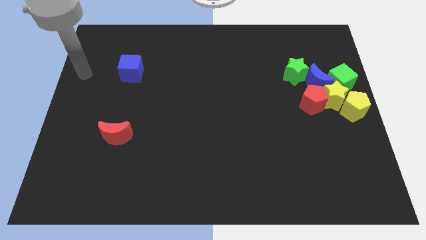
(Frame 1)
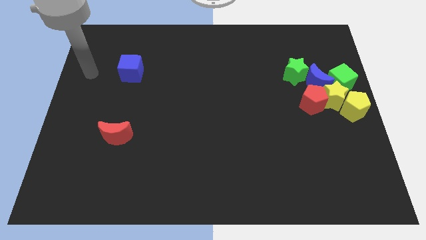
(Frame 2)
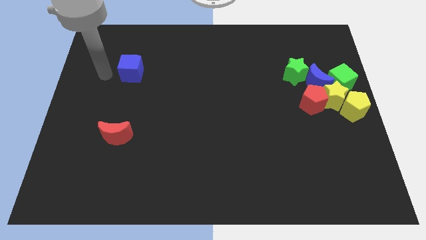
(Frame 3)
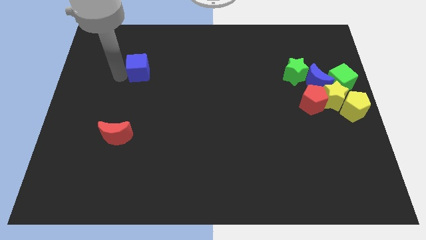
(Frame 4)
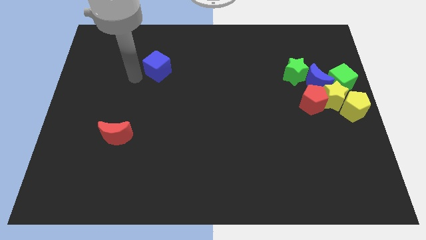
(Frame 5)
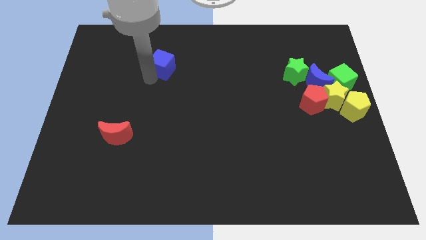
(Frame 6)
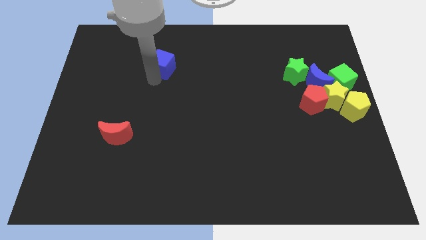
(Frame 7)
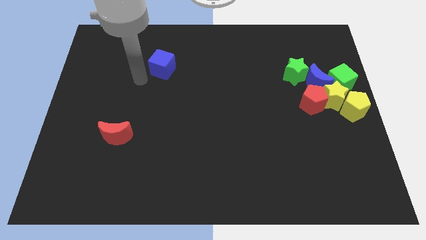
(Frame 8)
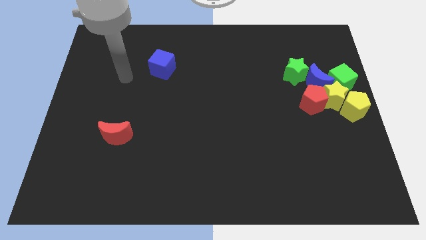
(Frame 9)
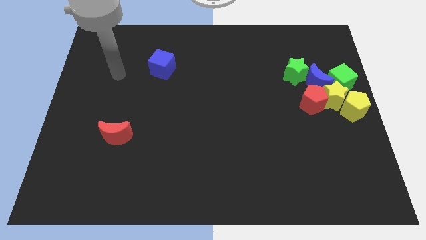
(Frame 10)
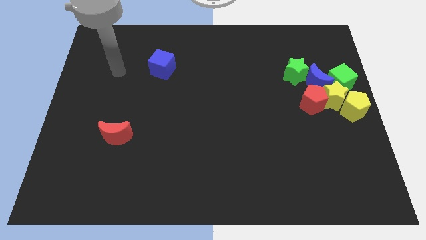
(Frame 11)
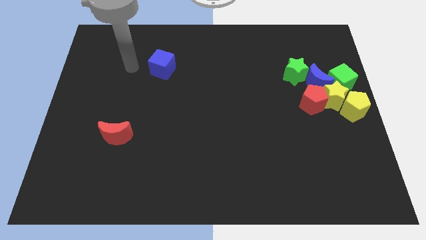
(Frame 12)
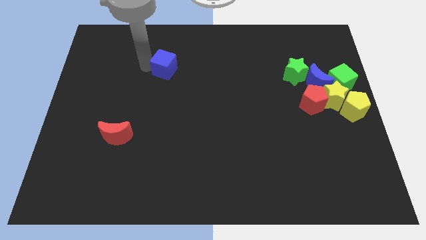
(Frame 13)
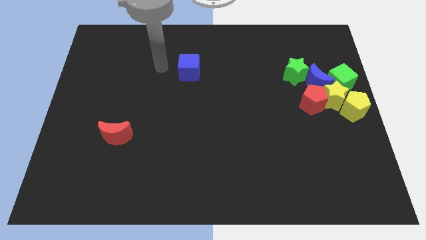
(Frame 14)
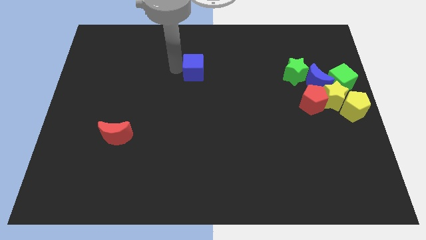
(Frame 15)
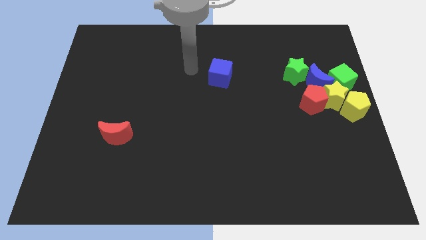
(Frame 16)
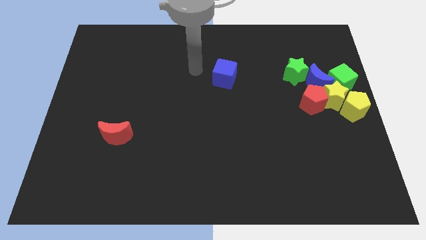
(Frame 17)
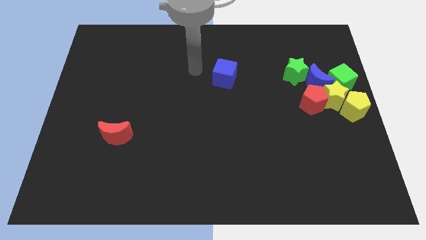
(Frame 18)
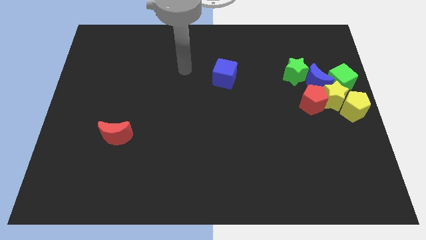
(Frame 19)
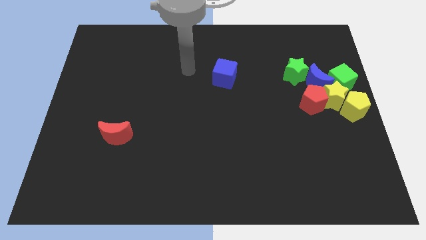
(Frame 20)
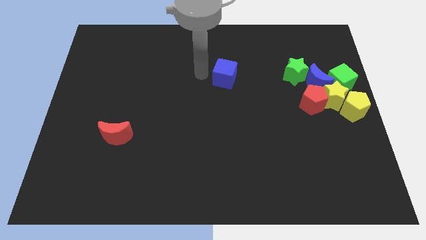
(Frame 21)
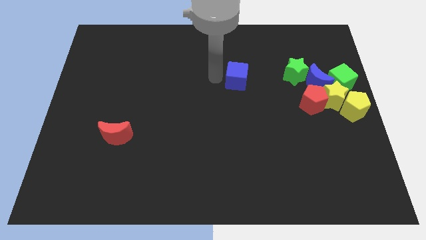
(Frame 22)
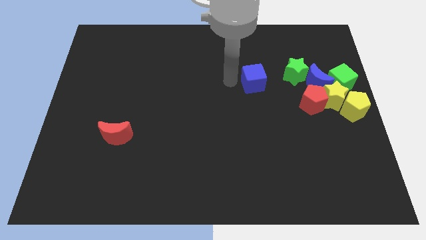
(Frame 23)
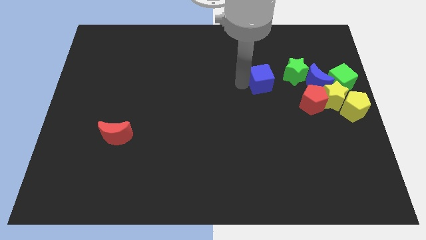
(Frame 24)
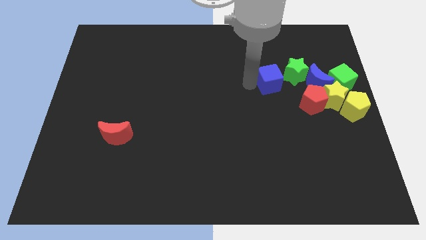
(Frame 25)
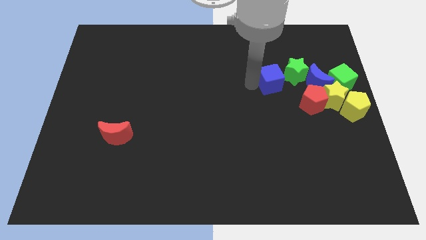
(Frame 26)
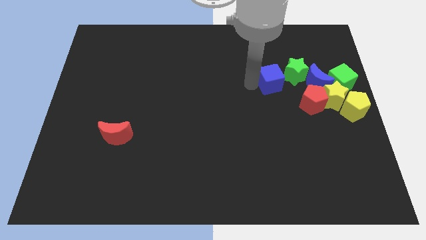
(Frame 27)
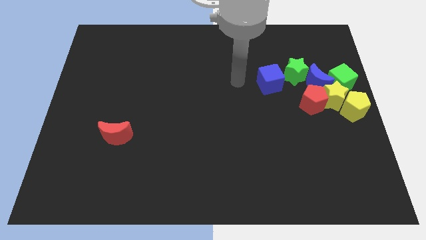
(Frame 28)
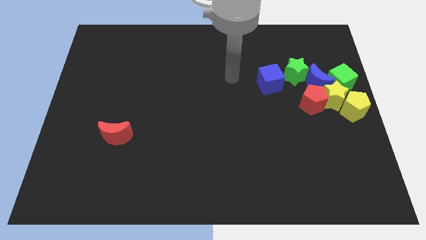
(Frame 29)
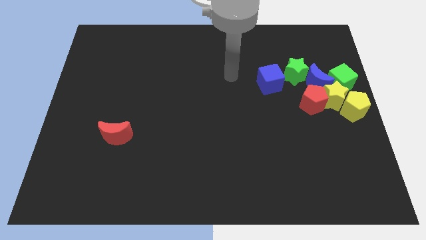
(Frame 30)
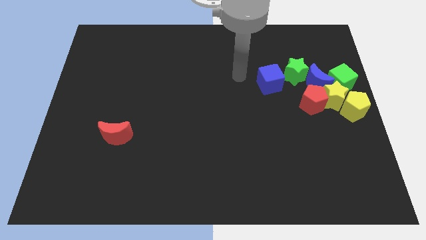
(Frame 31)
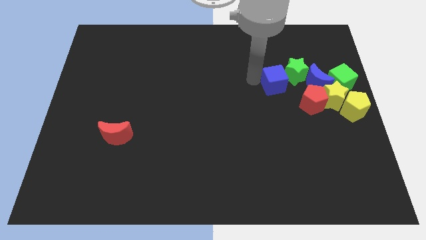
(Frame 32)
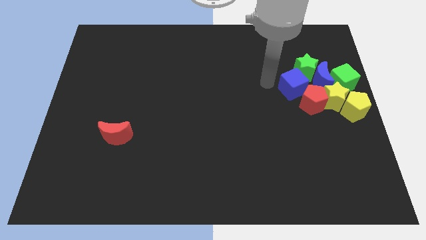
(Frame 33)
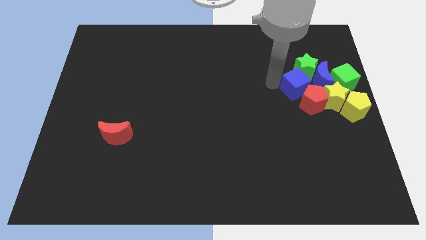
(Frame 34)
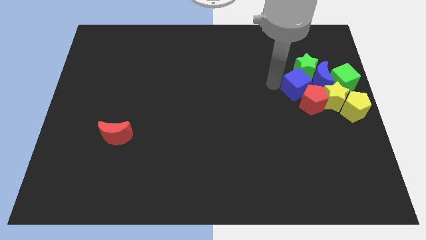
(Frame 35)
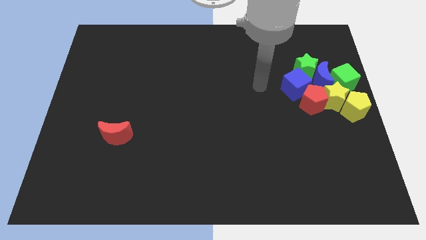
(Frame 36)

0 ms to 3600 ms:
push blue cube into the group of blocks

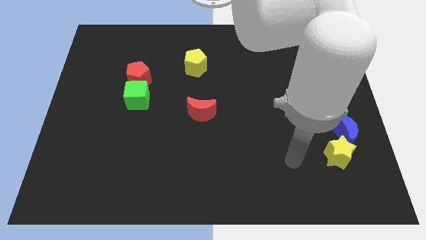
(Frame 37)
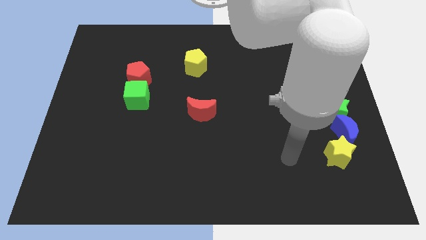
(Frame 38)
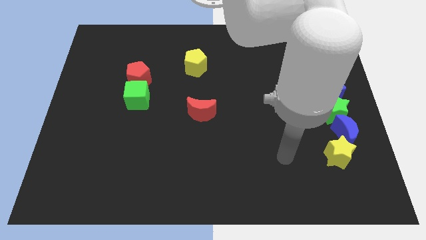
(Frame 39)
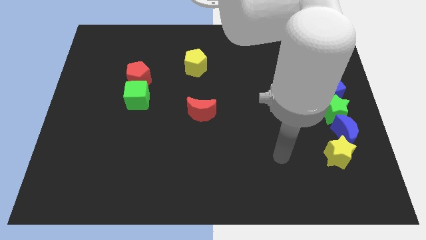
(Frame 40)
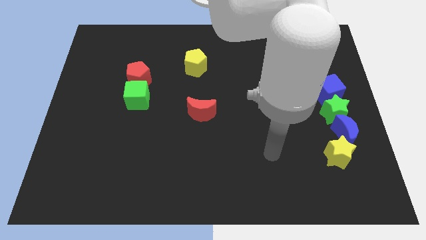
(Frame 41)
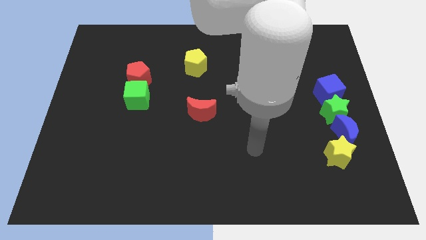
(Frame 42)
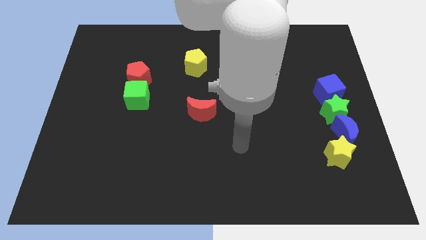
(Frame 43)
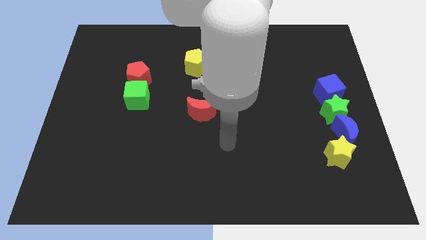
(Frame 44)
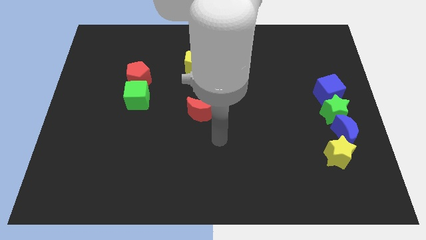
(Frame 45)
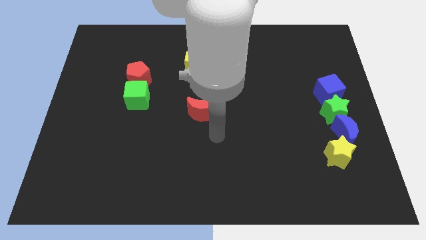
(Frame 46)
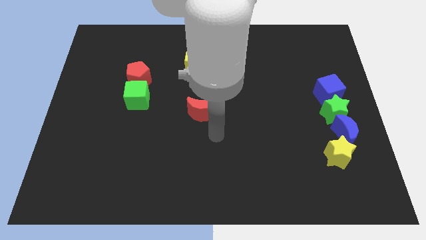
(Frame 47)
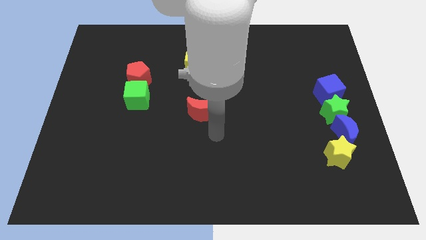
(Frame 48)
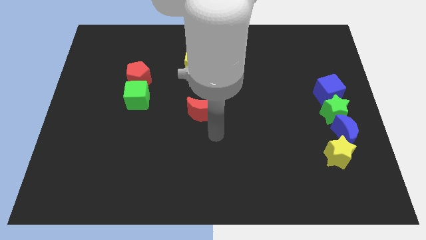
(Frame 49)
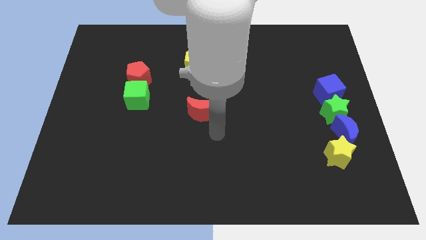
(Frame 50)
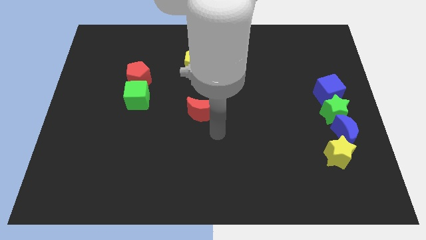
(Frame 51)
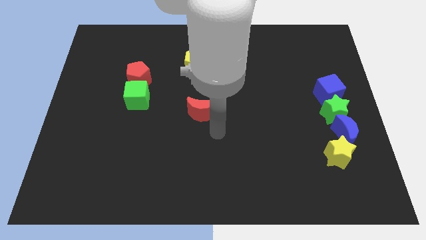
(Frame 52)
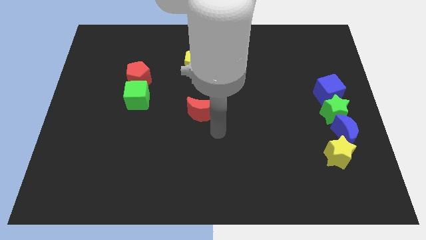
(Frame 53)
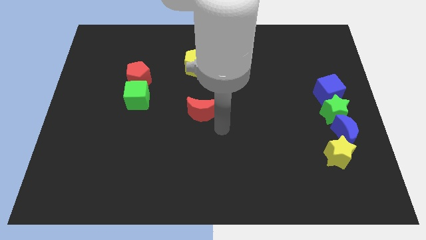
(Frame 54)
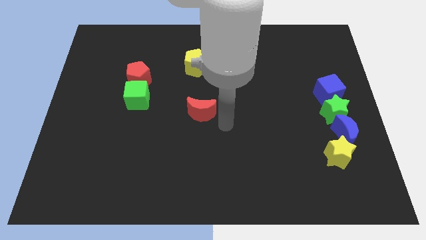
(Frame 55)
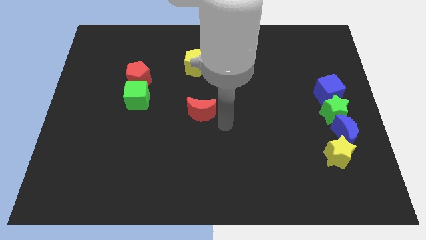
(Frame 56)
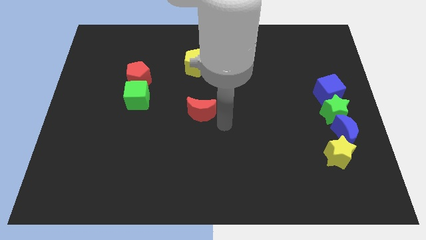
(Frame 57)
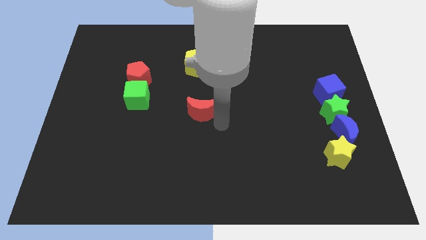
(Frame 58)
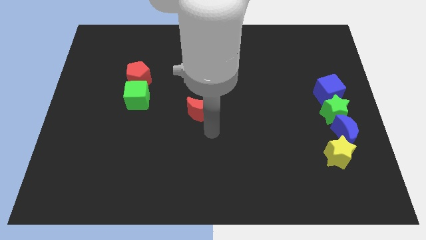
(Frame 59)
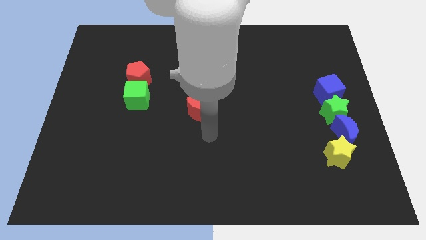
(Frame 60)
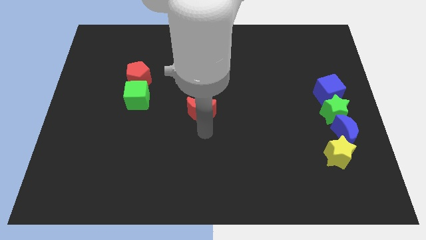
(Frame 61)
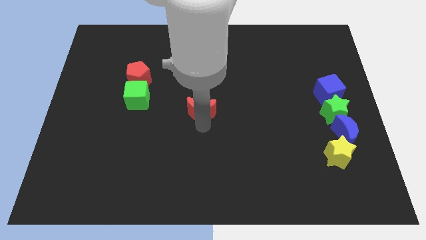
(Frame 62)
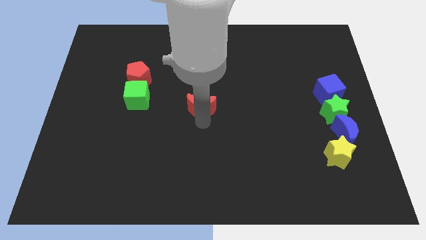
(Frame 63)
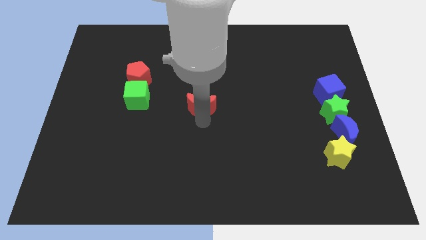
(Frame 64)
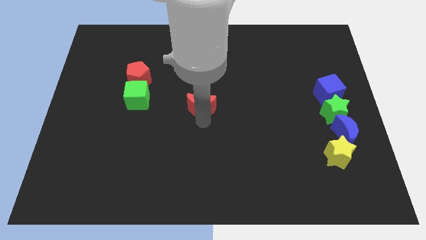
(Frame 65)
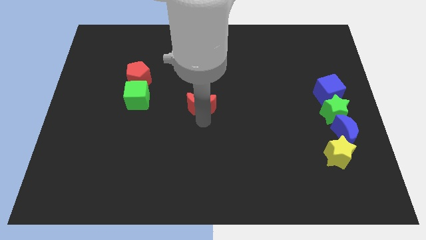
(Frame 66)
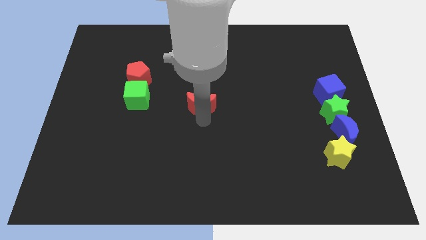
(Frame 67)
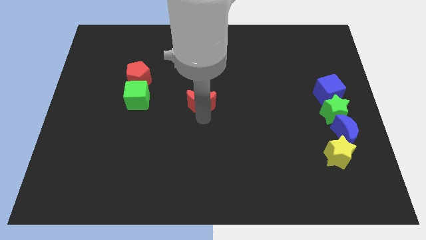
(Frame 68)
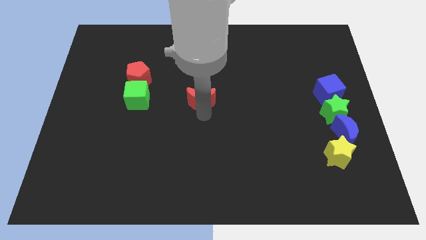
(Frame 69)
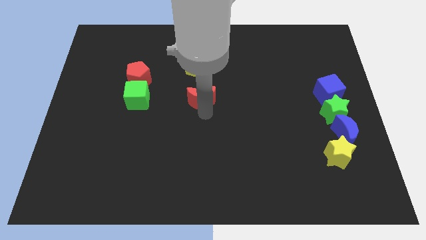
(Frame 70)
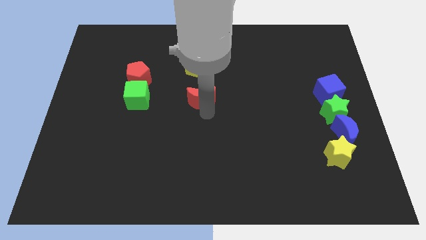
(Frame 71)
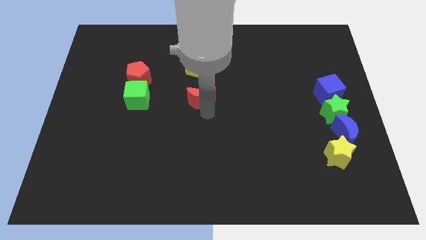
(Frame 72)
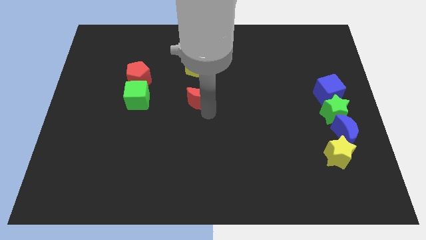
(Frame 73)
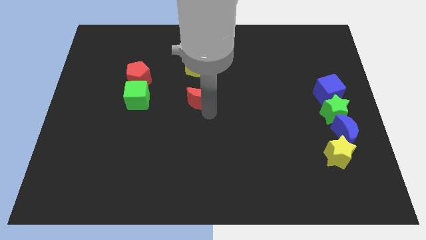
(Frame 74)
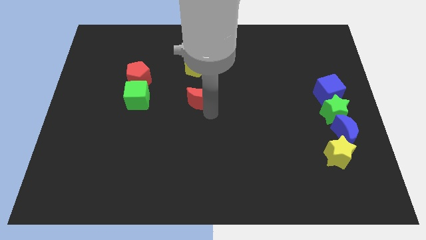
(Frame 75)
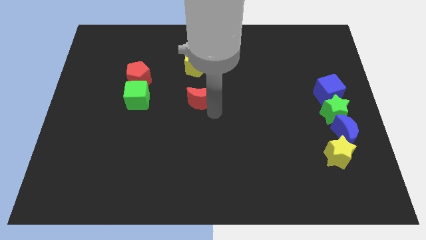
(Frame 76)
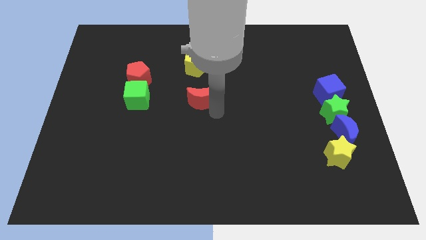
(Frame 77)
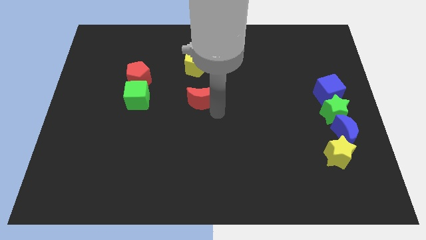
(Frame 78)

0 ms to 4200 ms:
move the red crescent below the yellow pentagon

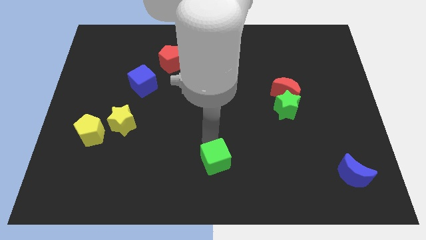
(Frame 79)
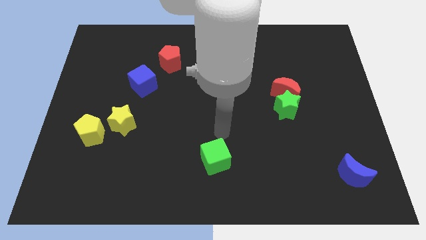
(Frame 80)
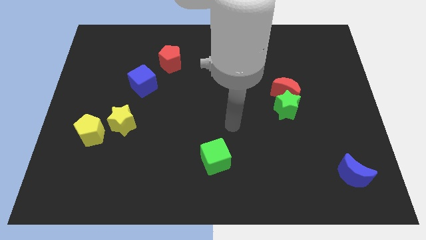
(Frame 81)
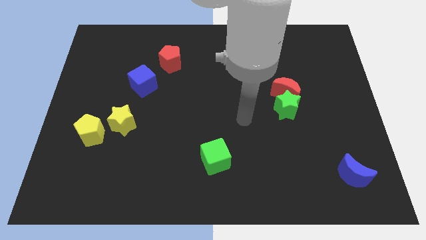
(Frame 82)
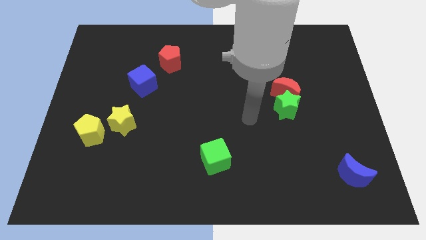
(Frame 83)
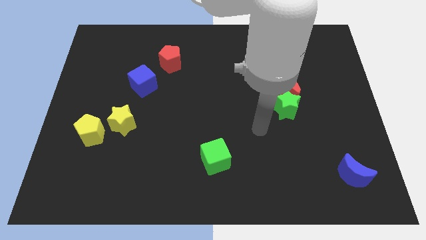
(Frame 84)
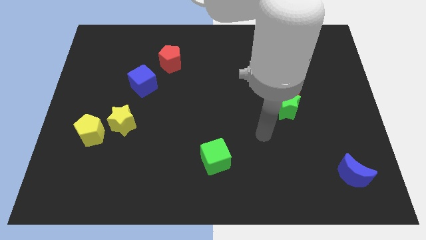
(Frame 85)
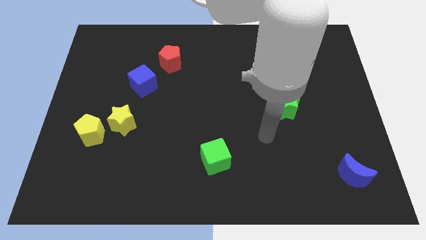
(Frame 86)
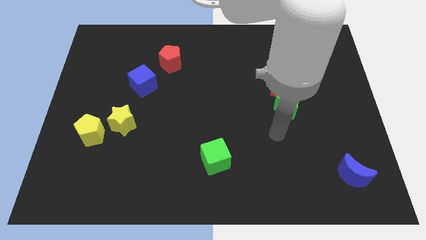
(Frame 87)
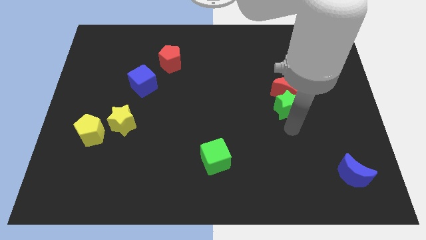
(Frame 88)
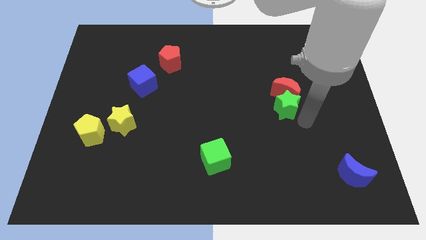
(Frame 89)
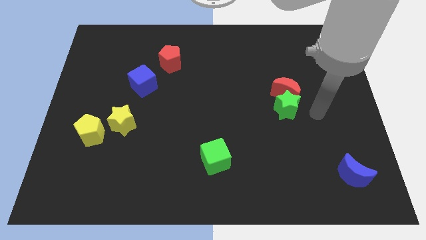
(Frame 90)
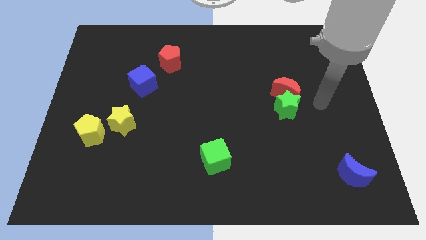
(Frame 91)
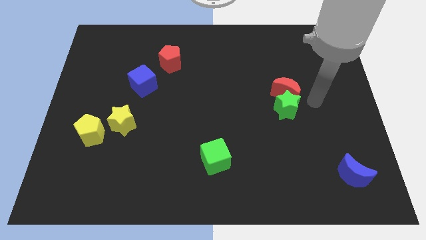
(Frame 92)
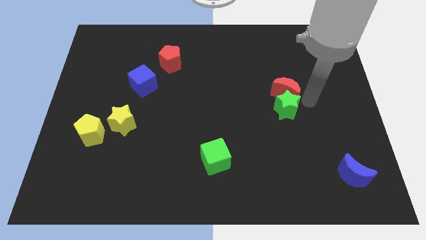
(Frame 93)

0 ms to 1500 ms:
move the arm away from the green cube
